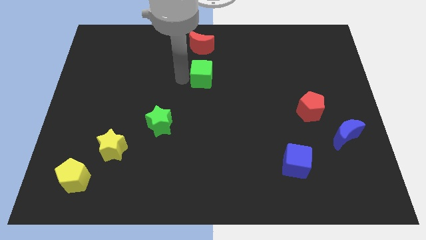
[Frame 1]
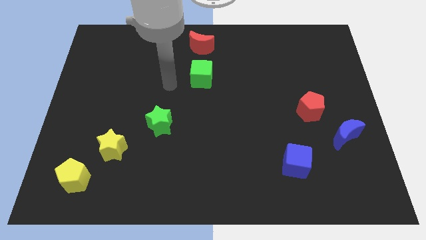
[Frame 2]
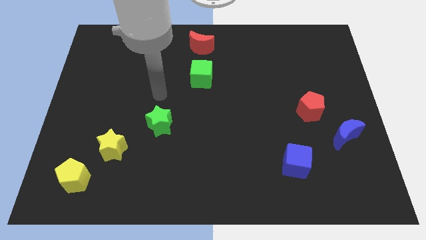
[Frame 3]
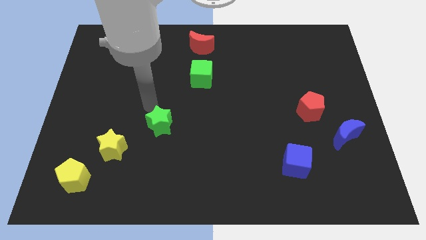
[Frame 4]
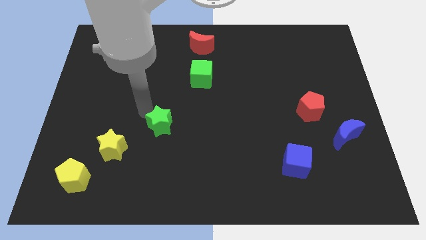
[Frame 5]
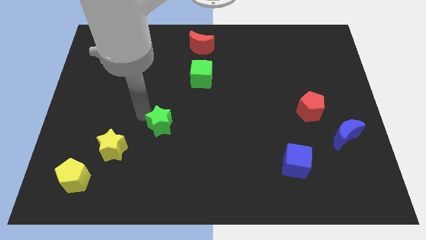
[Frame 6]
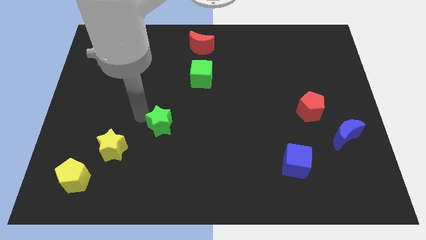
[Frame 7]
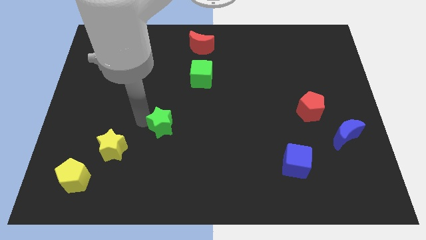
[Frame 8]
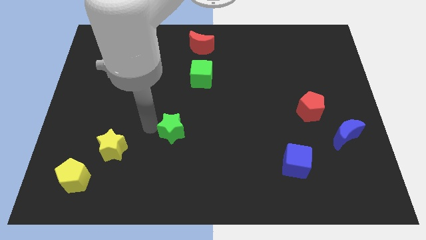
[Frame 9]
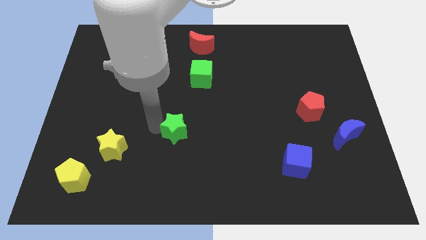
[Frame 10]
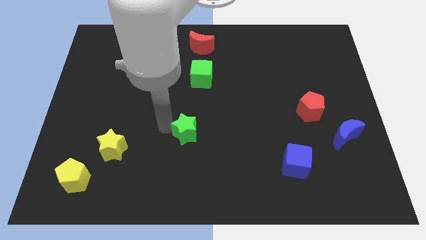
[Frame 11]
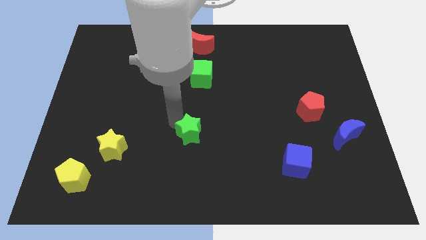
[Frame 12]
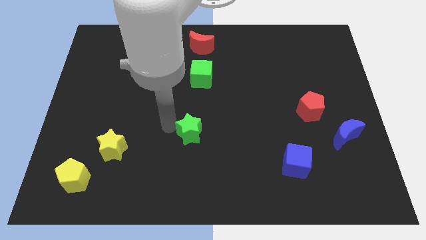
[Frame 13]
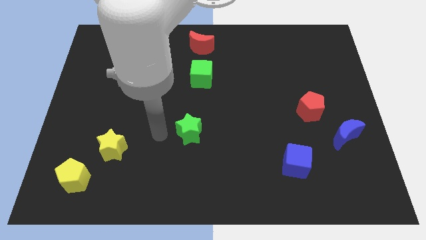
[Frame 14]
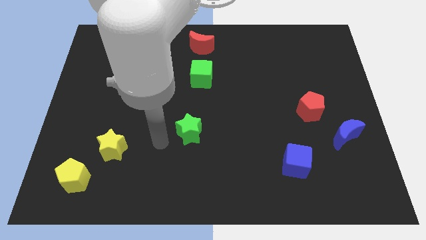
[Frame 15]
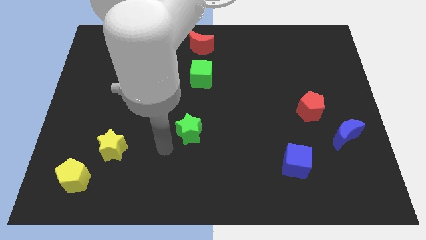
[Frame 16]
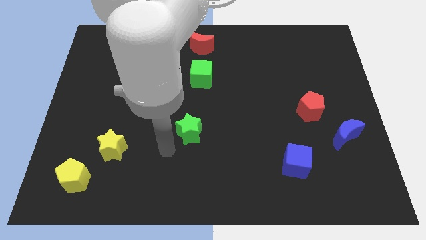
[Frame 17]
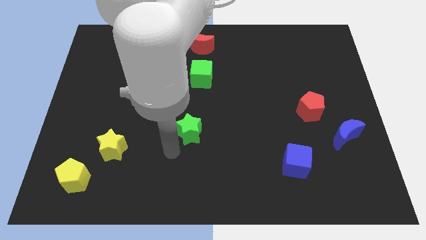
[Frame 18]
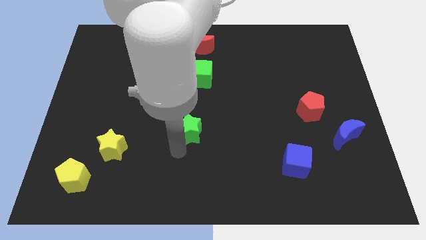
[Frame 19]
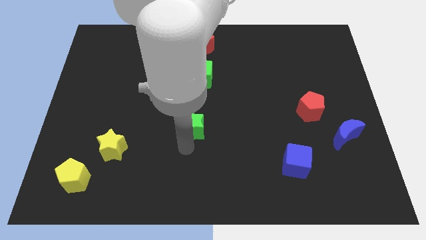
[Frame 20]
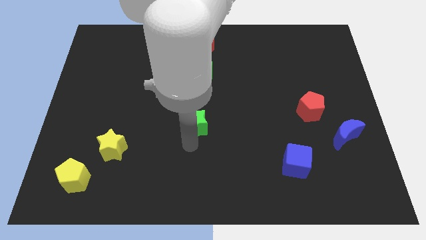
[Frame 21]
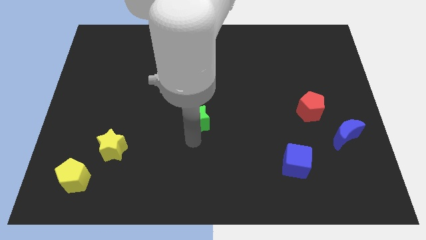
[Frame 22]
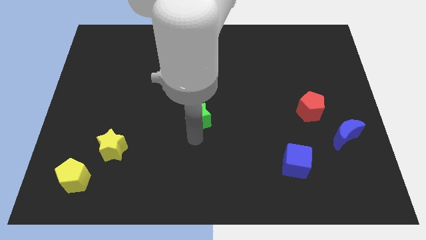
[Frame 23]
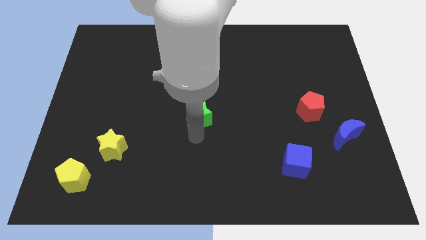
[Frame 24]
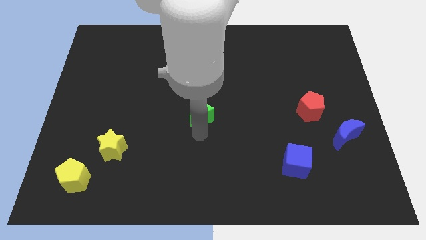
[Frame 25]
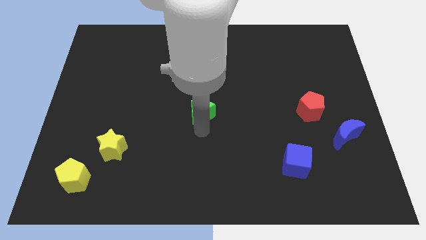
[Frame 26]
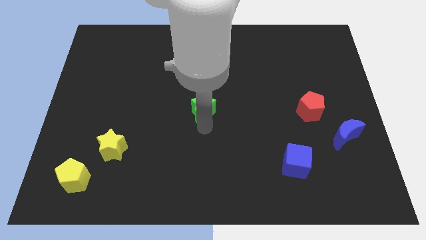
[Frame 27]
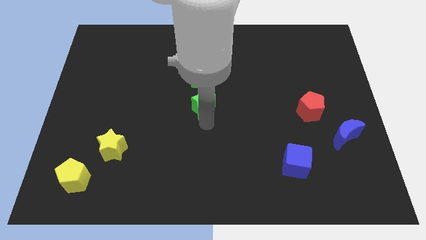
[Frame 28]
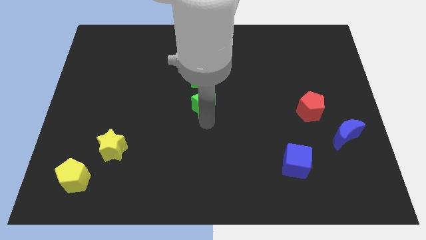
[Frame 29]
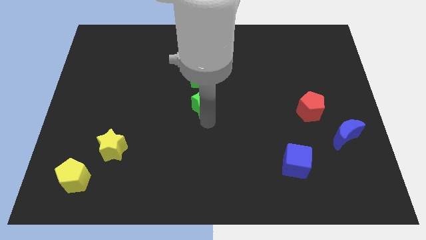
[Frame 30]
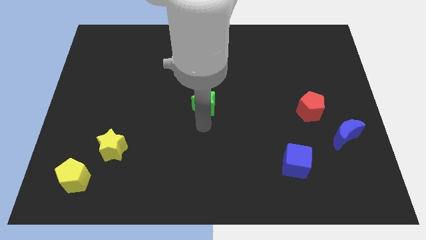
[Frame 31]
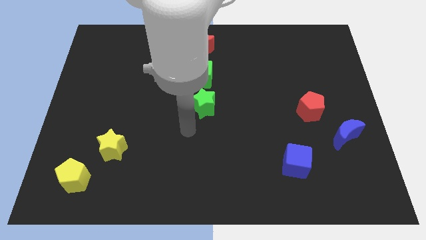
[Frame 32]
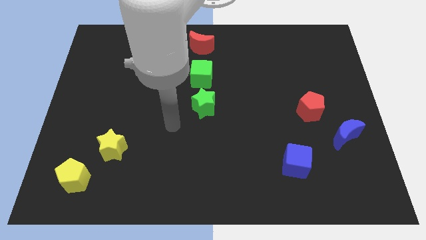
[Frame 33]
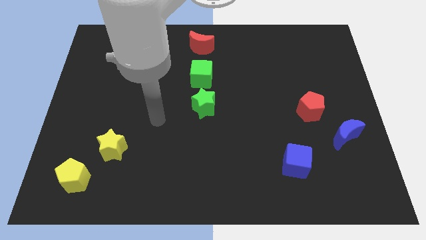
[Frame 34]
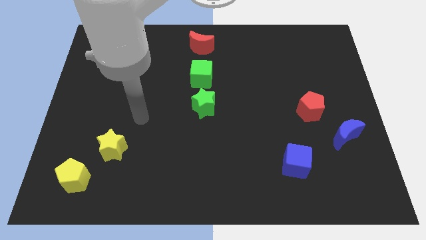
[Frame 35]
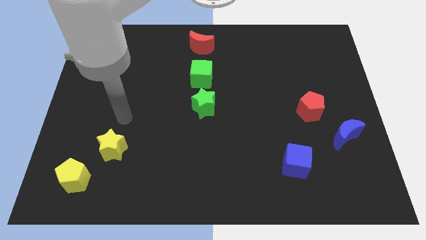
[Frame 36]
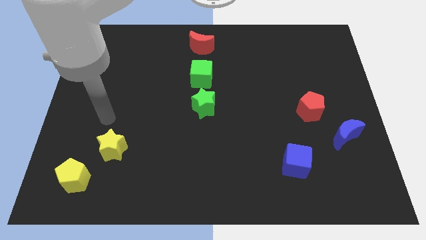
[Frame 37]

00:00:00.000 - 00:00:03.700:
push the green star below the green cube

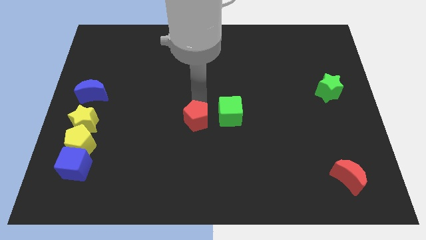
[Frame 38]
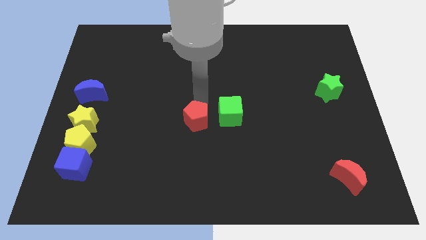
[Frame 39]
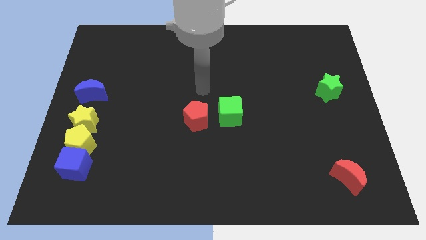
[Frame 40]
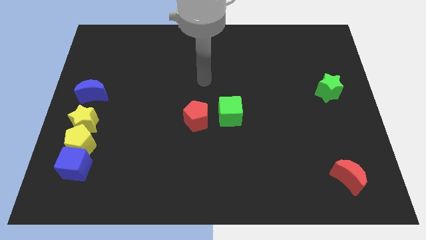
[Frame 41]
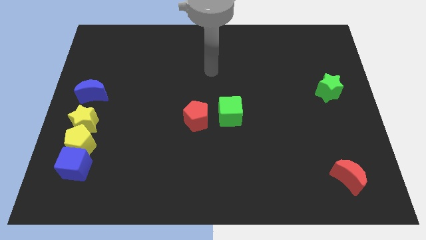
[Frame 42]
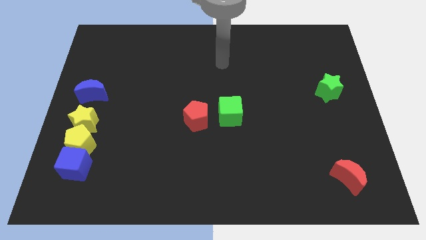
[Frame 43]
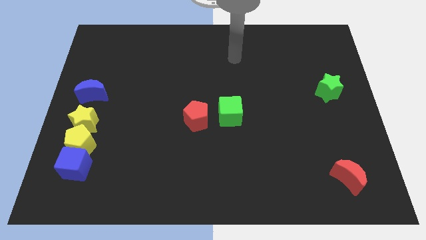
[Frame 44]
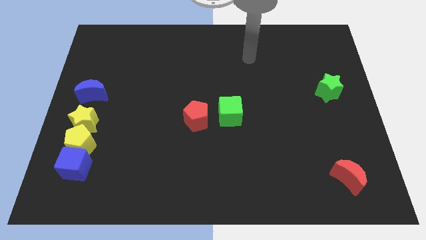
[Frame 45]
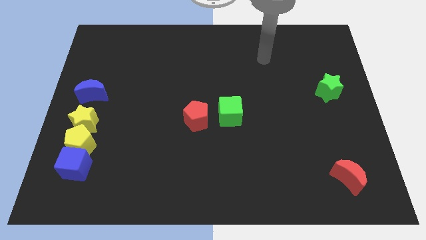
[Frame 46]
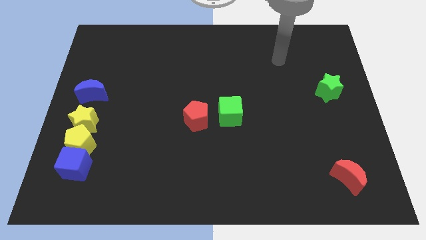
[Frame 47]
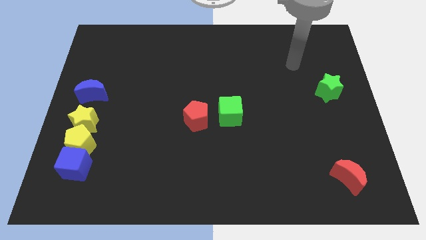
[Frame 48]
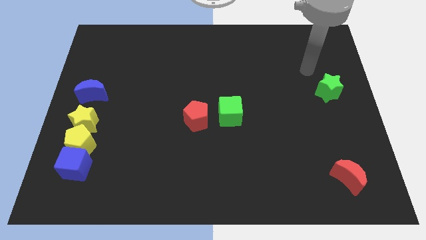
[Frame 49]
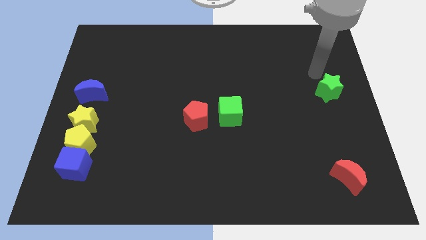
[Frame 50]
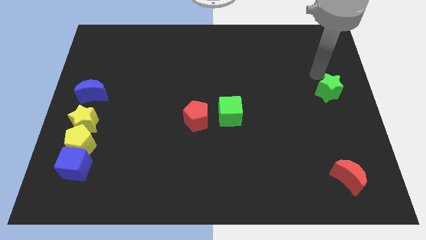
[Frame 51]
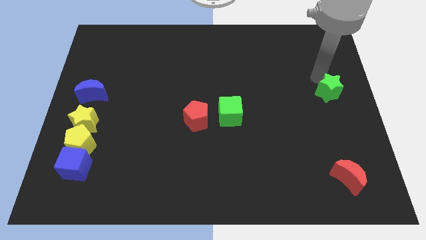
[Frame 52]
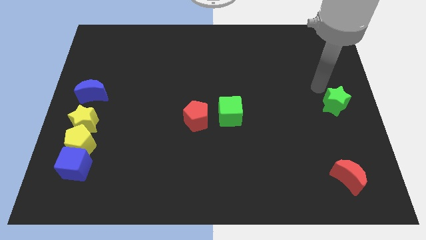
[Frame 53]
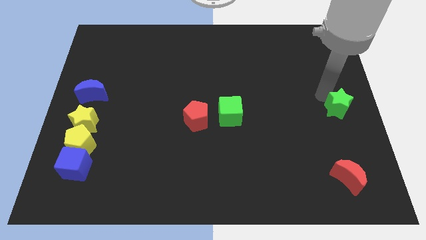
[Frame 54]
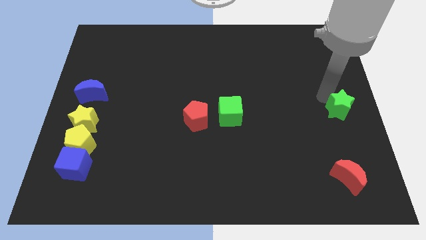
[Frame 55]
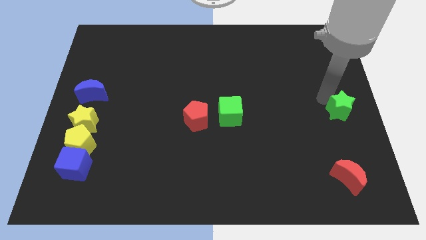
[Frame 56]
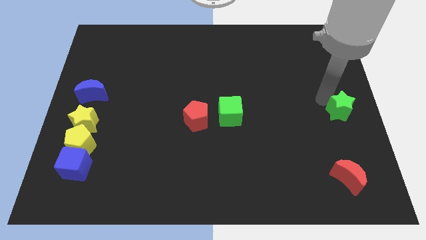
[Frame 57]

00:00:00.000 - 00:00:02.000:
slightly push the green star on top of red moon

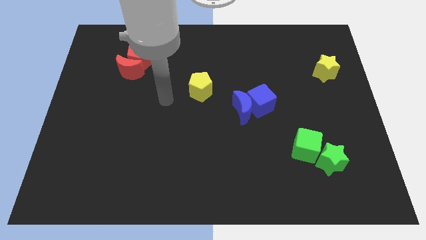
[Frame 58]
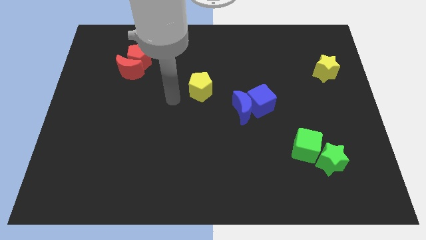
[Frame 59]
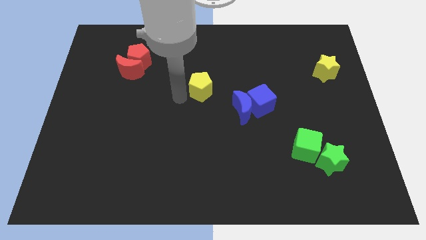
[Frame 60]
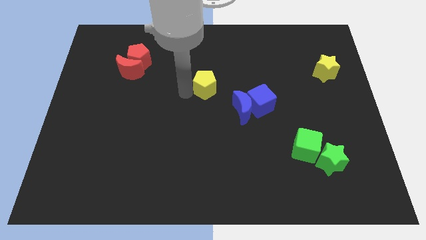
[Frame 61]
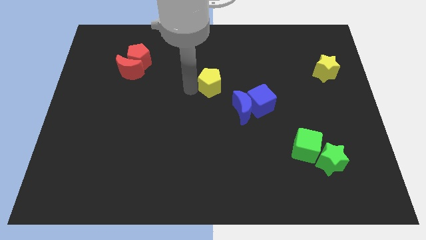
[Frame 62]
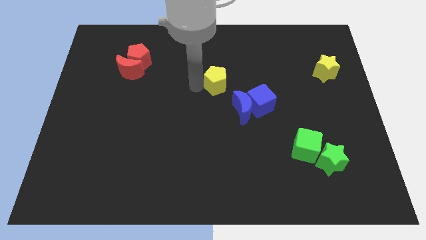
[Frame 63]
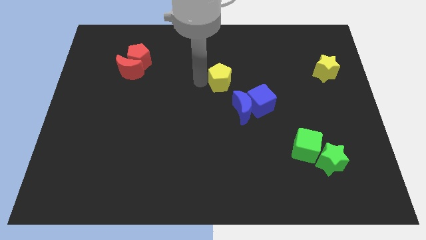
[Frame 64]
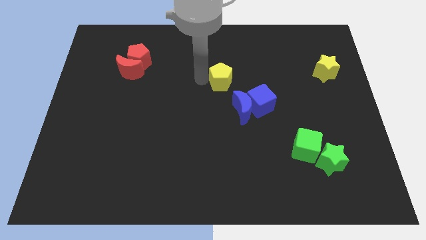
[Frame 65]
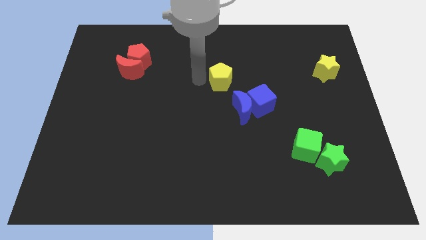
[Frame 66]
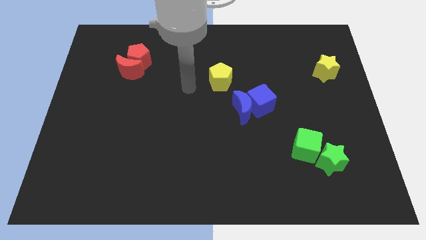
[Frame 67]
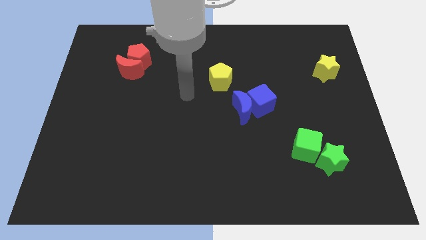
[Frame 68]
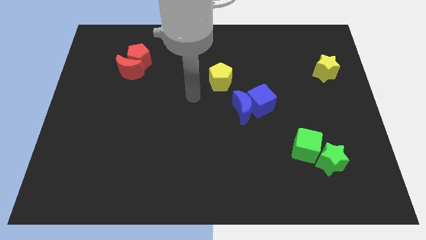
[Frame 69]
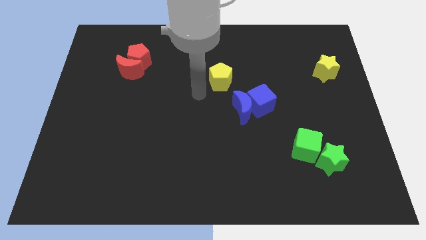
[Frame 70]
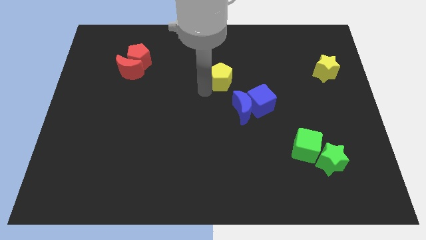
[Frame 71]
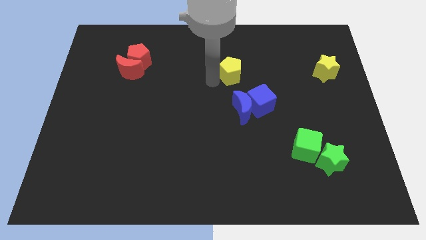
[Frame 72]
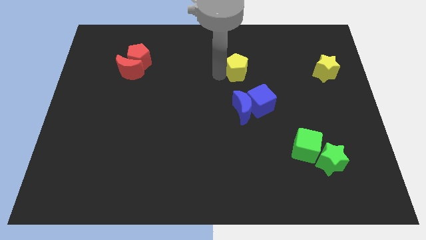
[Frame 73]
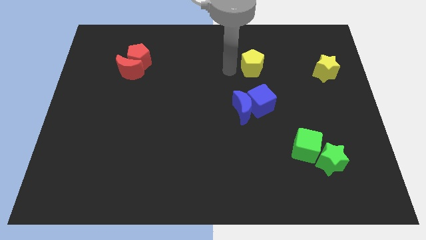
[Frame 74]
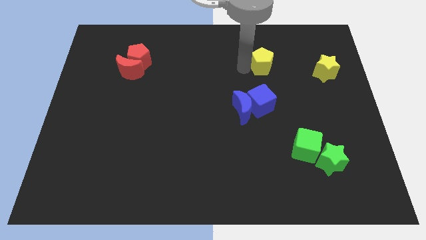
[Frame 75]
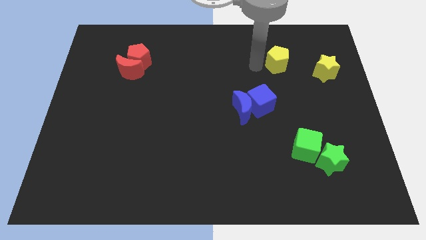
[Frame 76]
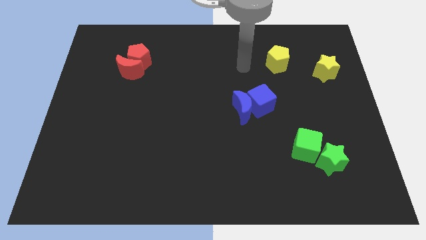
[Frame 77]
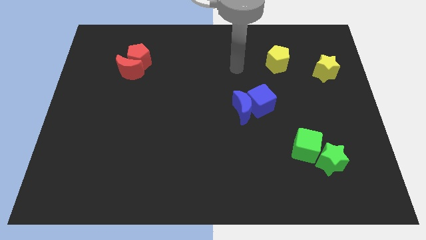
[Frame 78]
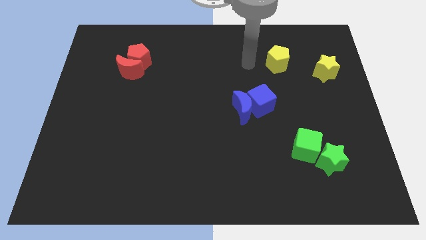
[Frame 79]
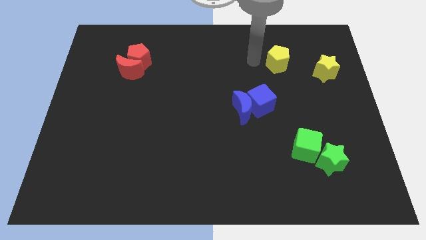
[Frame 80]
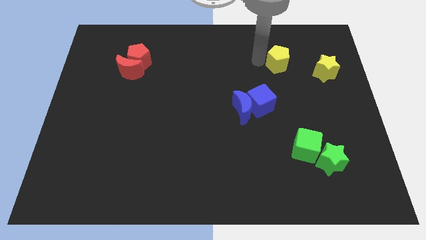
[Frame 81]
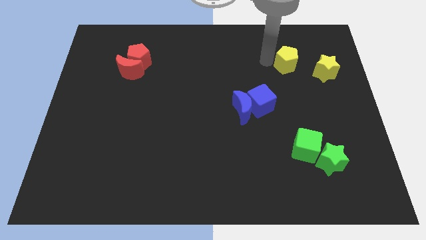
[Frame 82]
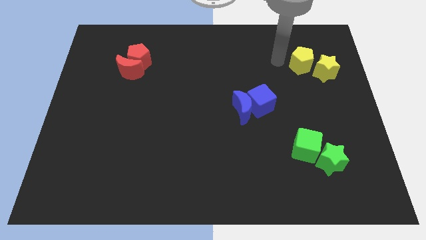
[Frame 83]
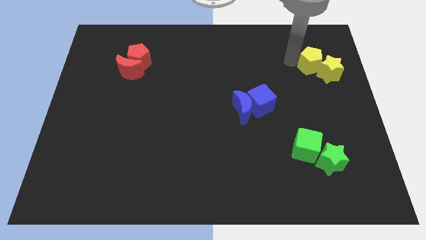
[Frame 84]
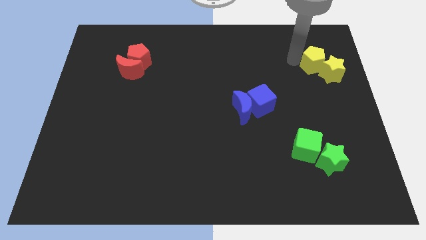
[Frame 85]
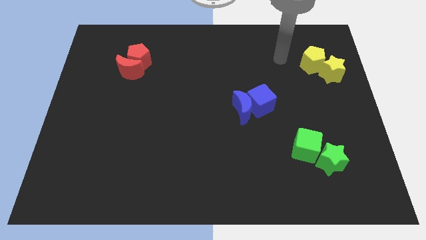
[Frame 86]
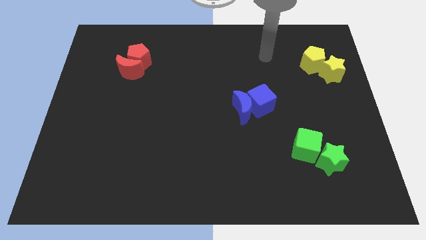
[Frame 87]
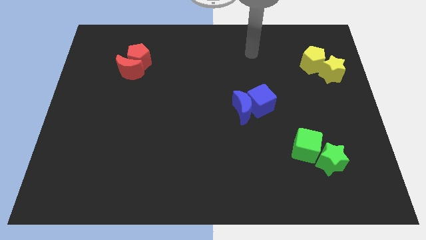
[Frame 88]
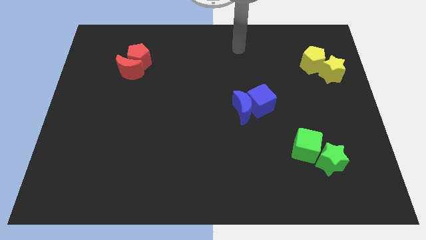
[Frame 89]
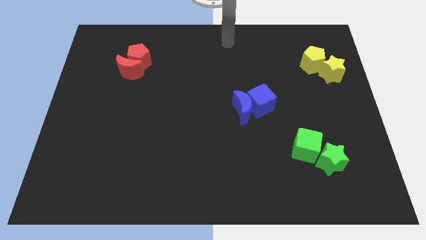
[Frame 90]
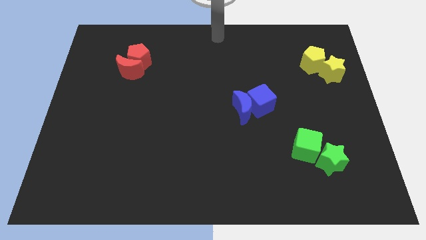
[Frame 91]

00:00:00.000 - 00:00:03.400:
push the yellow pentagon into the yellow star
